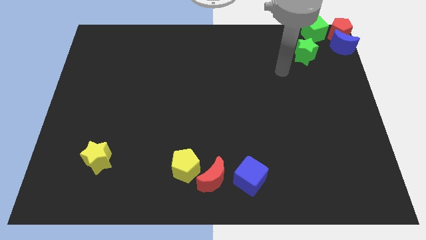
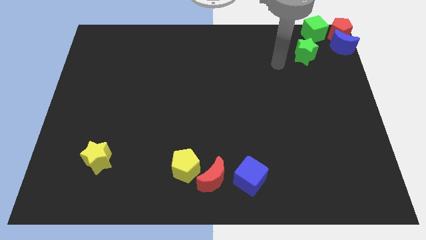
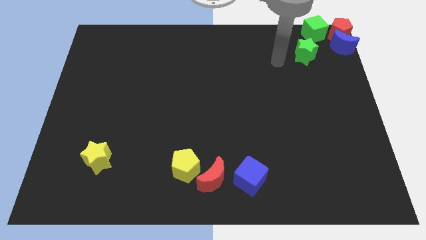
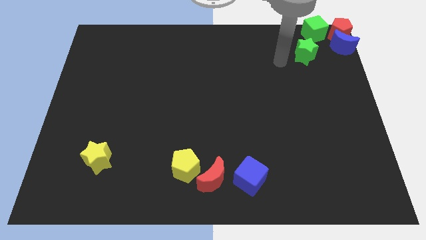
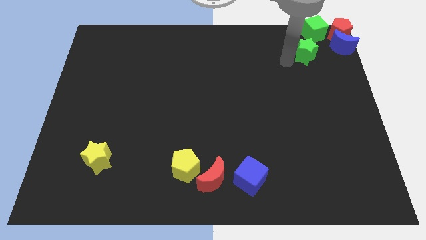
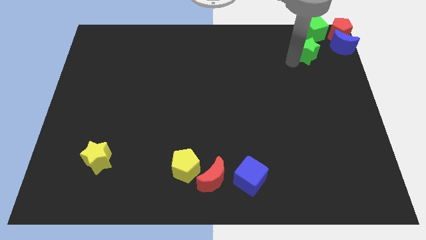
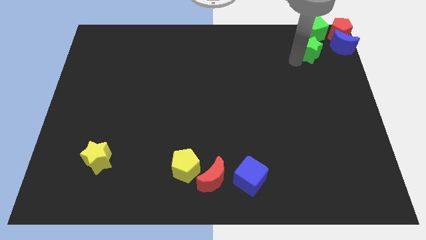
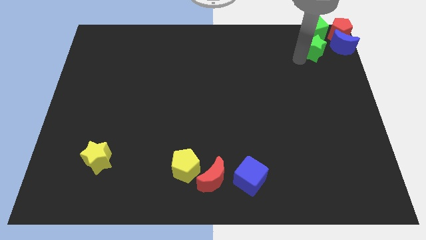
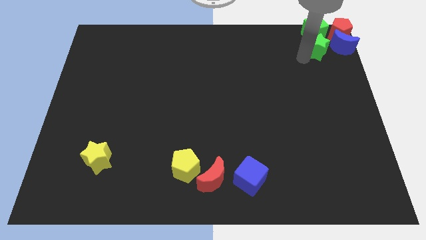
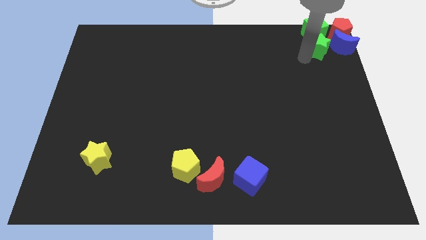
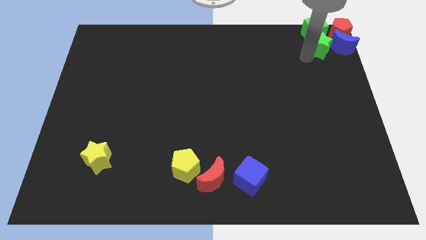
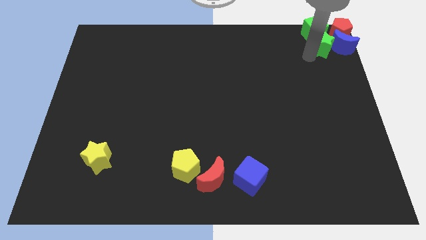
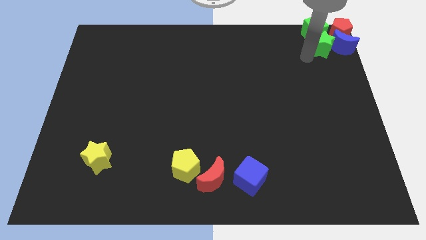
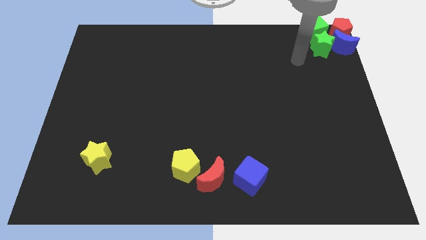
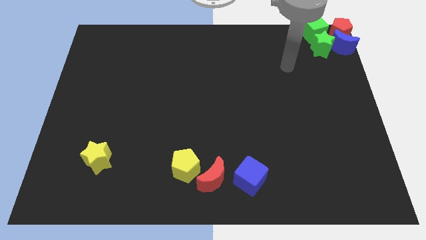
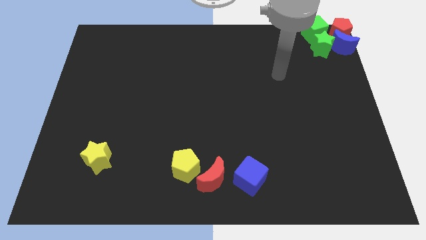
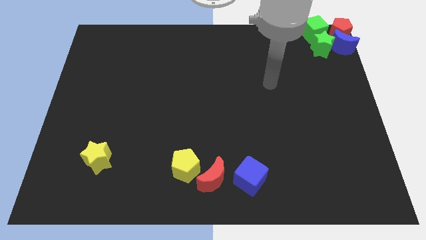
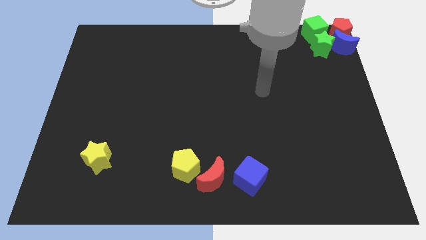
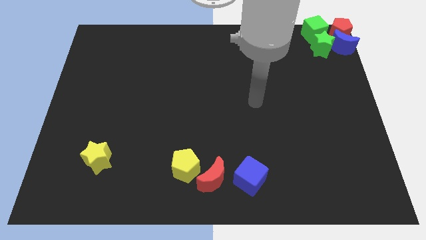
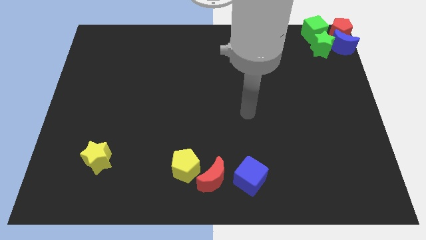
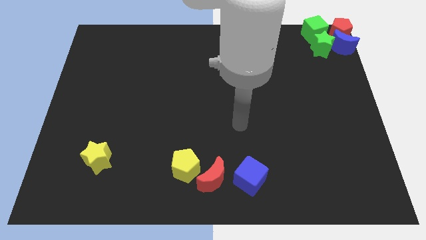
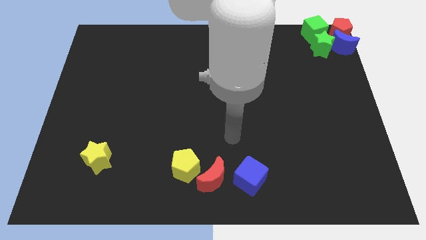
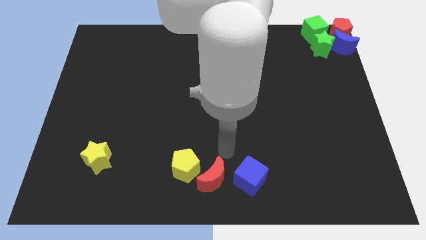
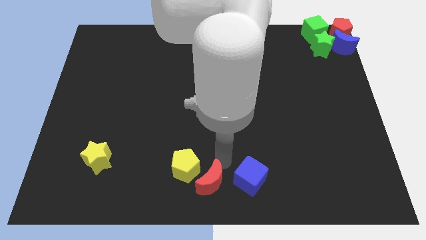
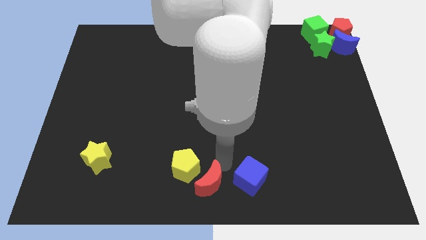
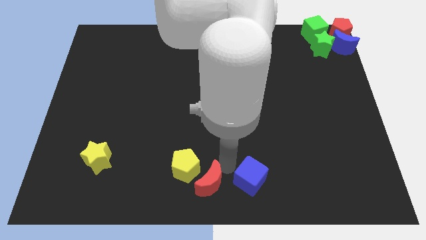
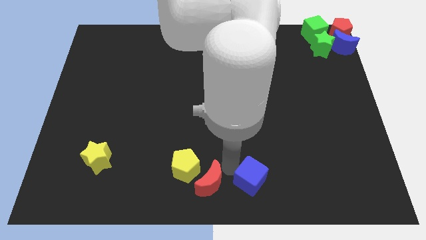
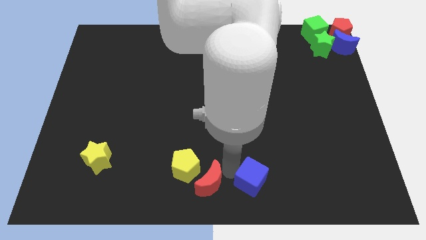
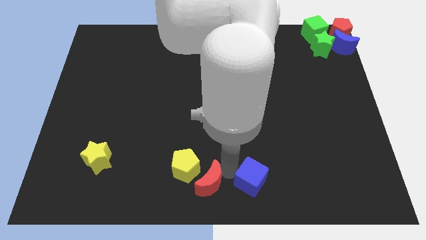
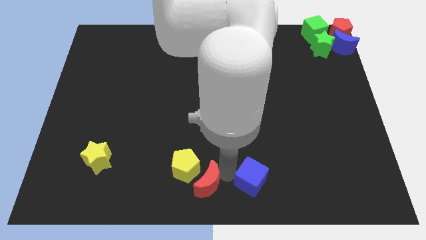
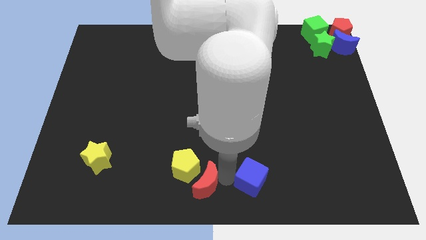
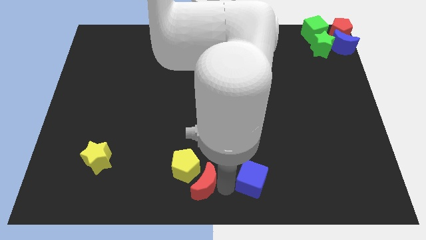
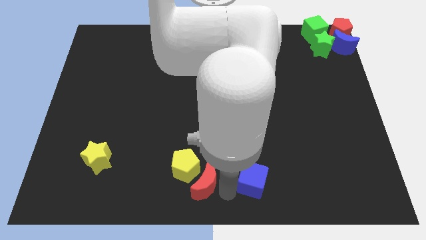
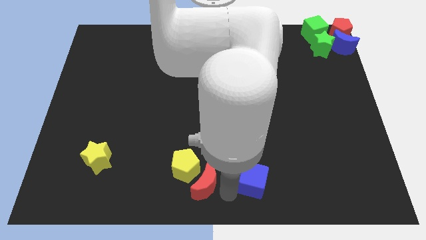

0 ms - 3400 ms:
point the arm in between the blue cube and the red moon

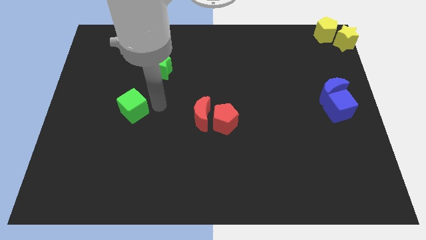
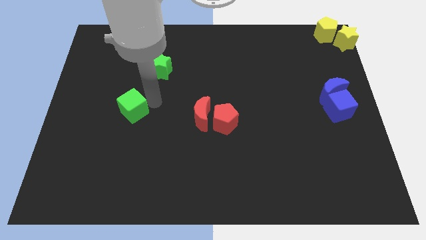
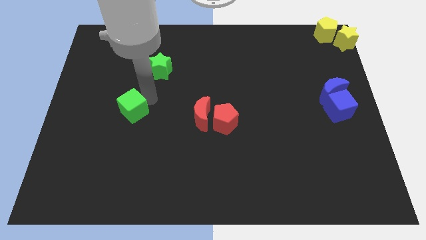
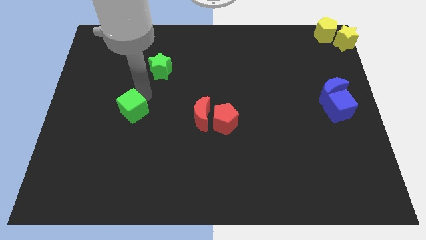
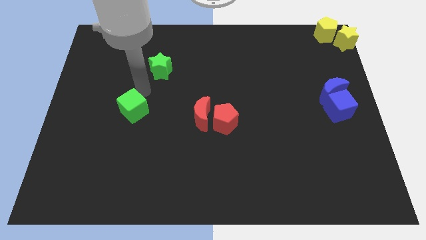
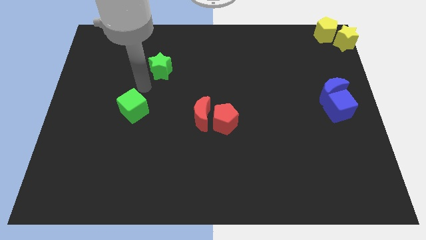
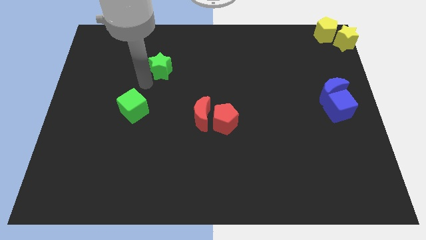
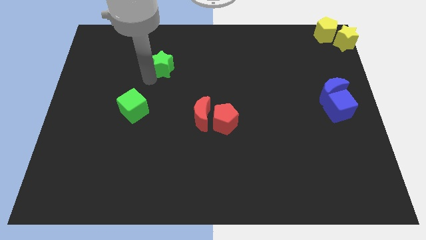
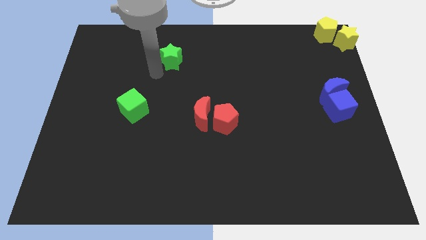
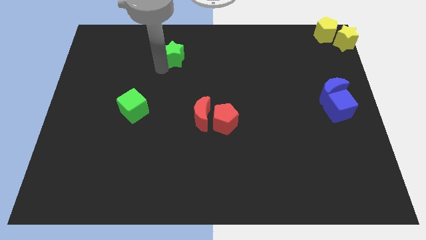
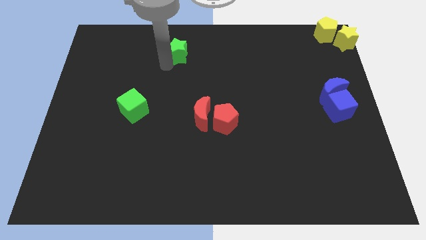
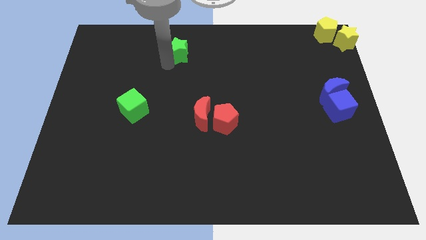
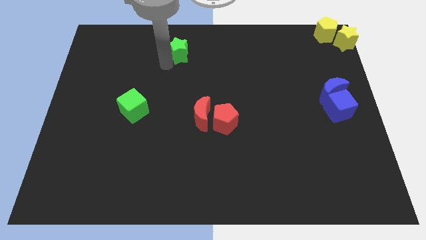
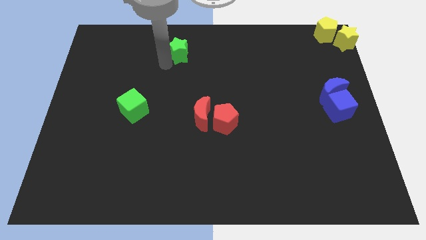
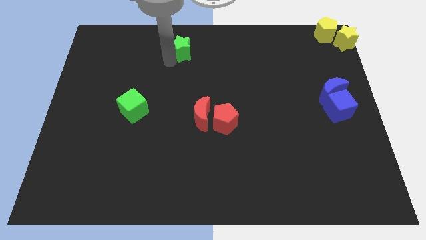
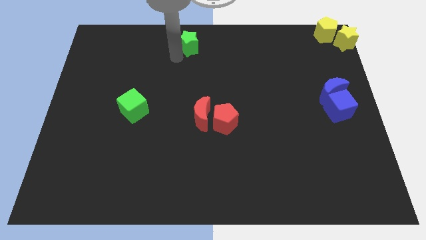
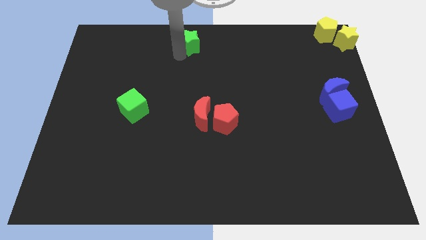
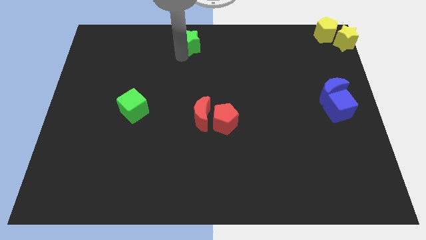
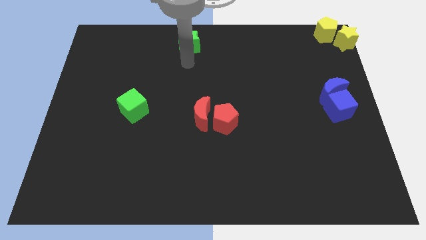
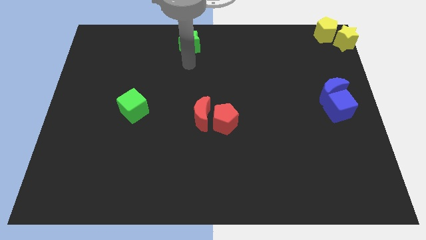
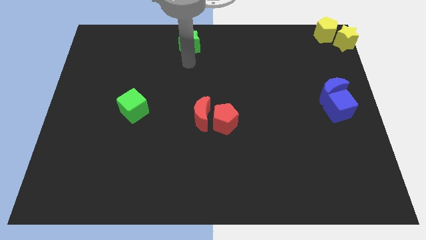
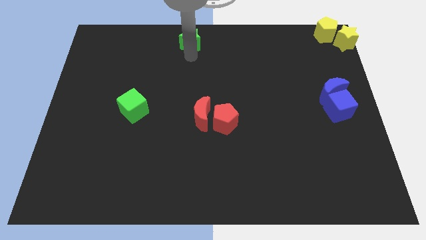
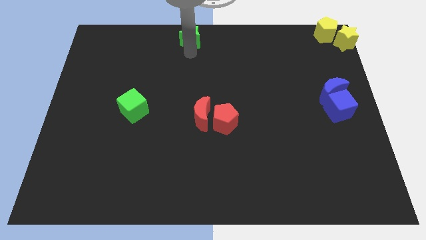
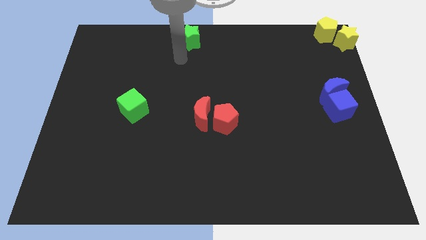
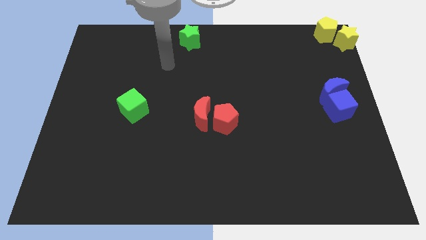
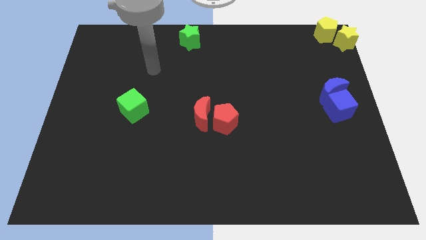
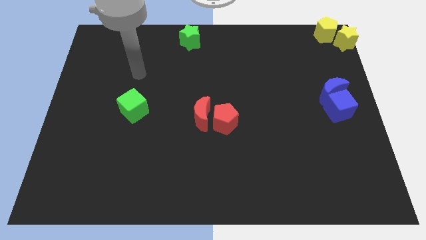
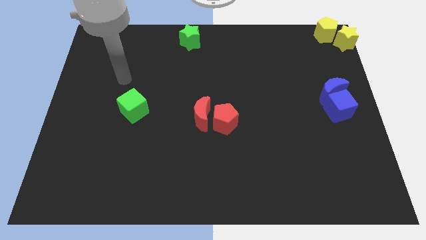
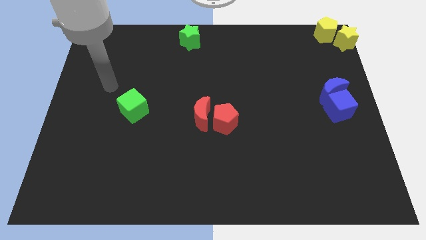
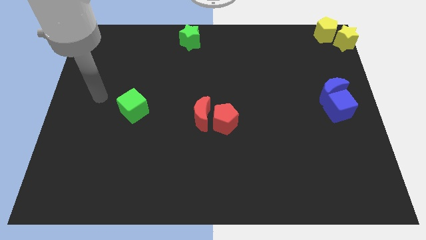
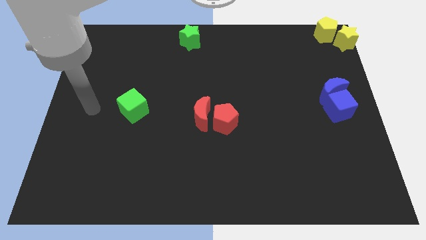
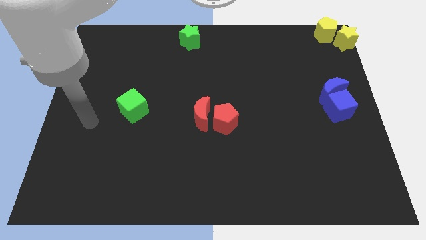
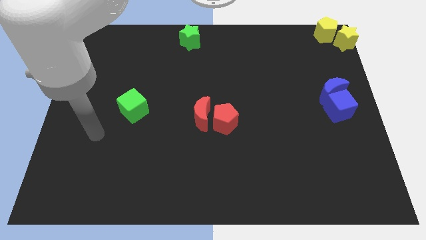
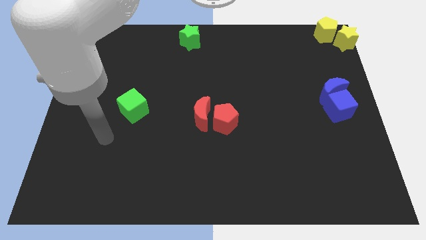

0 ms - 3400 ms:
move the green star to the top center

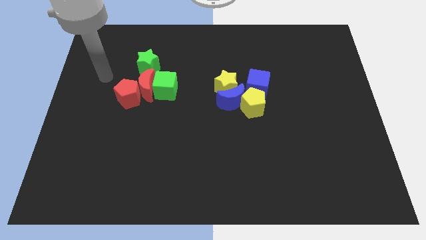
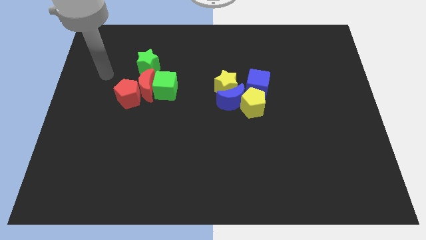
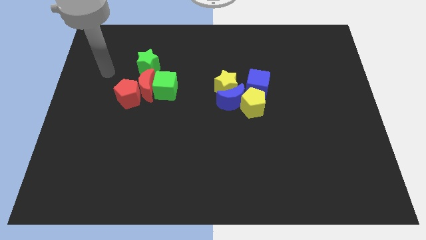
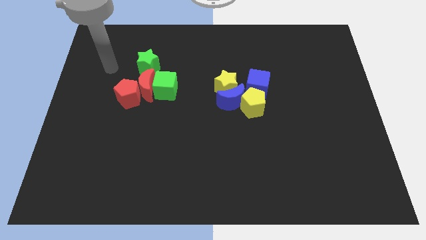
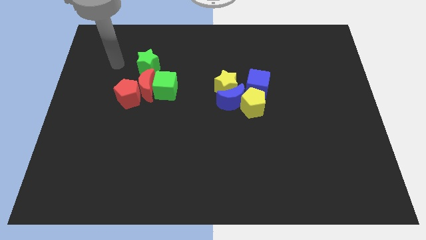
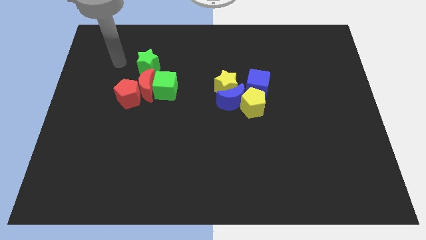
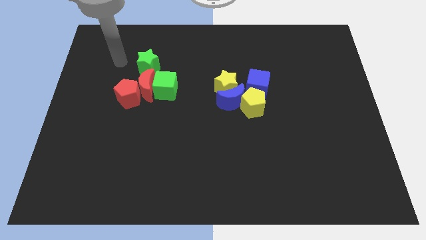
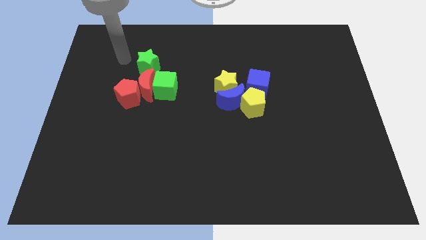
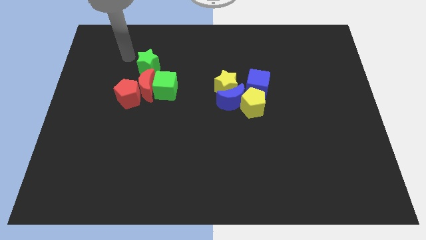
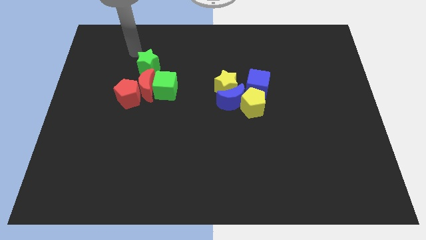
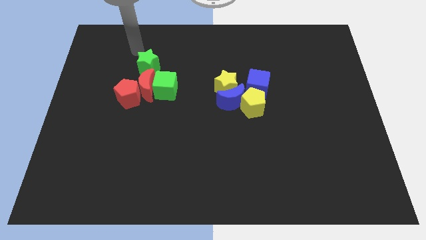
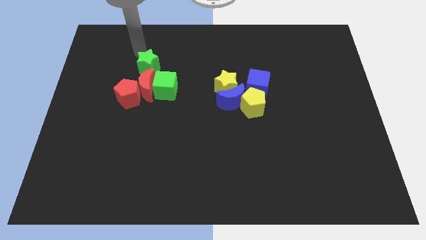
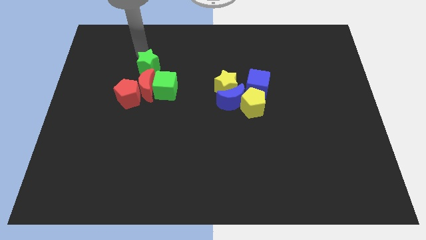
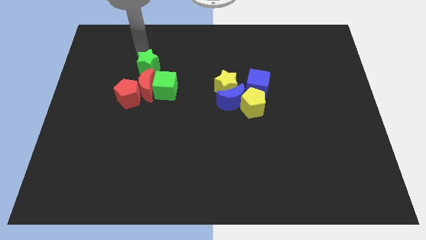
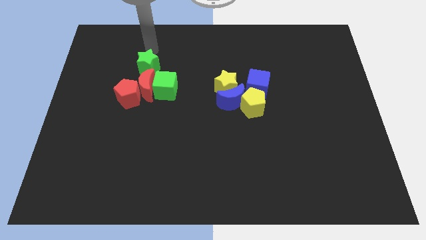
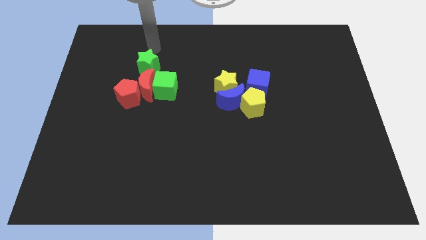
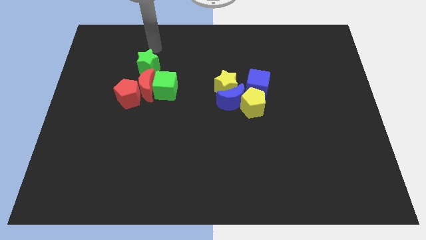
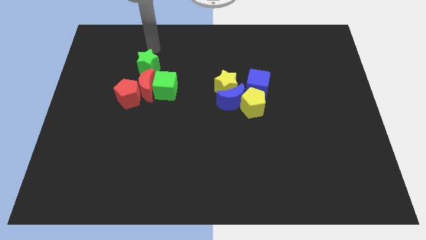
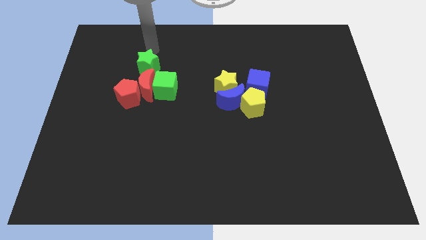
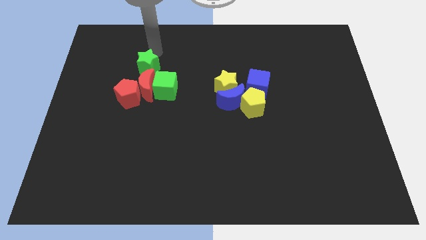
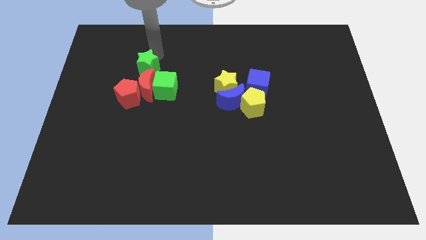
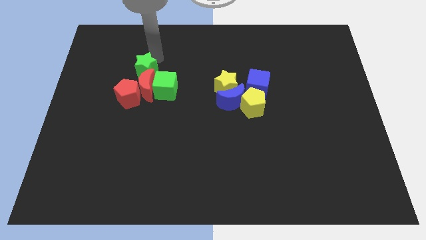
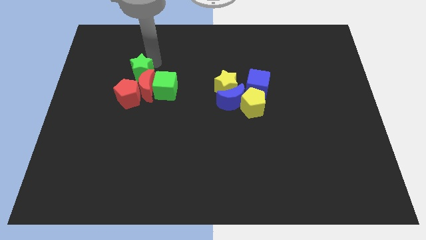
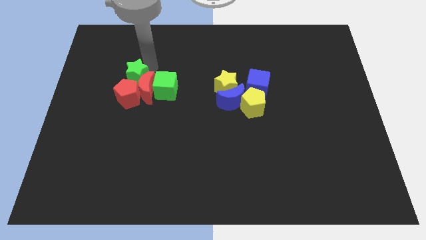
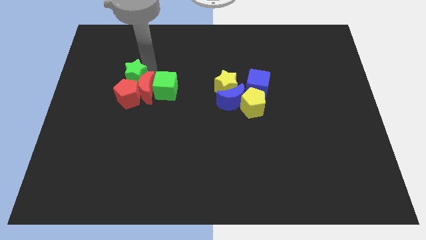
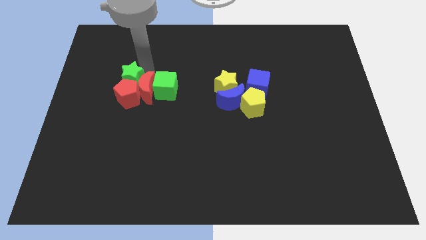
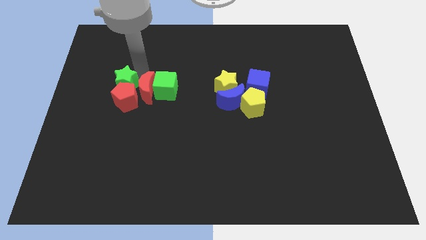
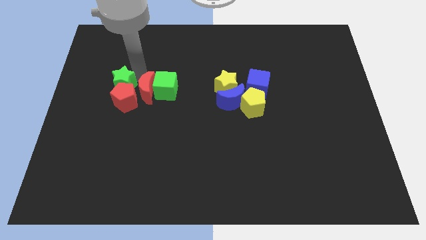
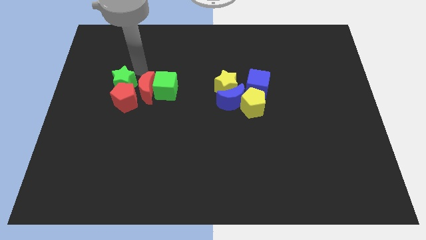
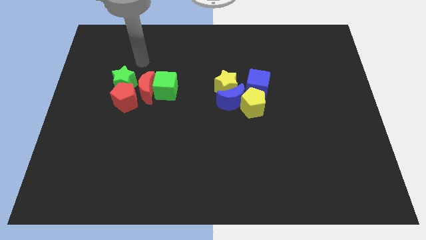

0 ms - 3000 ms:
place the green star above the red pentagon
